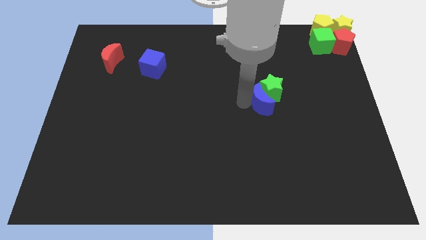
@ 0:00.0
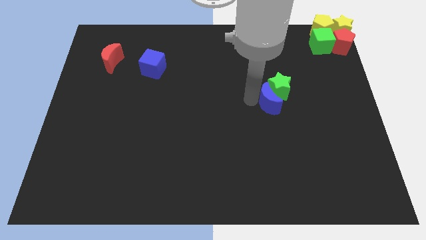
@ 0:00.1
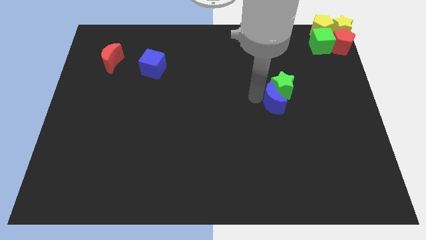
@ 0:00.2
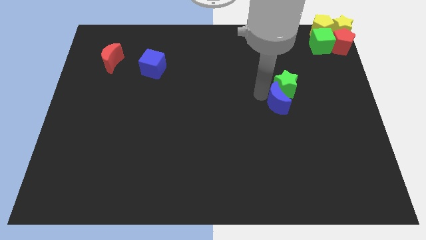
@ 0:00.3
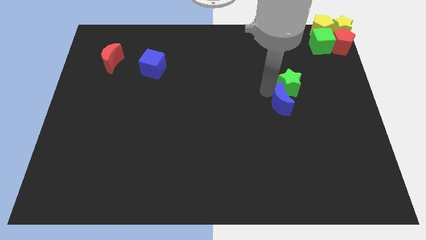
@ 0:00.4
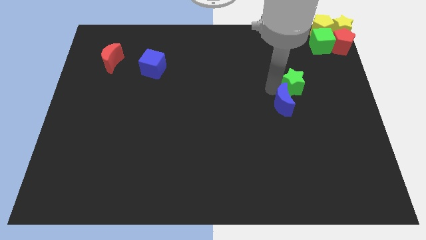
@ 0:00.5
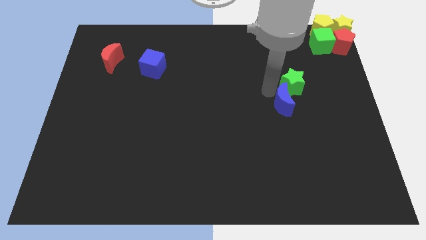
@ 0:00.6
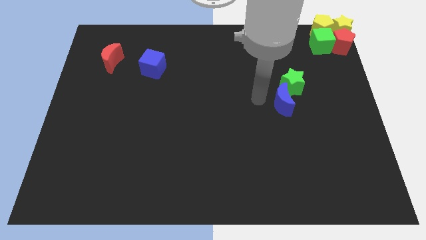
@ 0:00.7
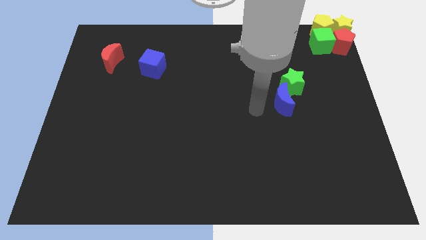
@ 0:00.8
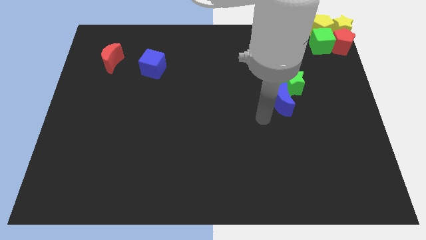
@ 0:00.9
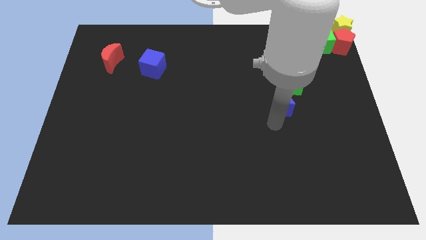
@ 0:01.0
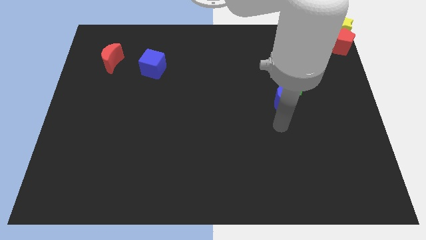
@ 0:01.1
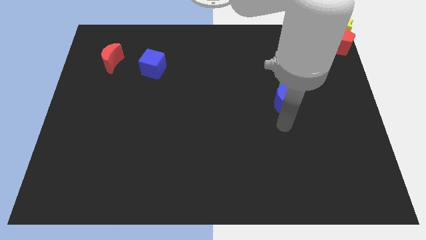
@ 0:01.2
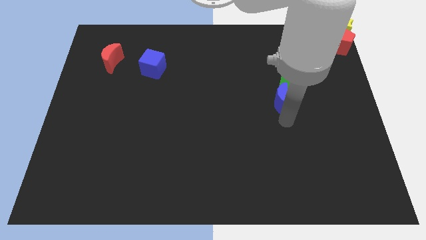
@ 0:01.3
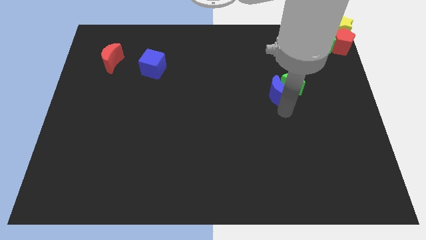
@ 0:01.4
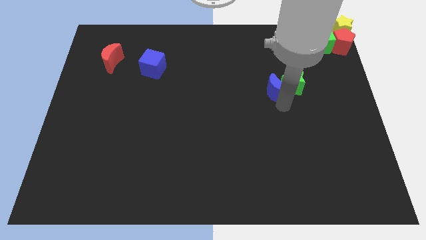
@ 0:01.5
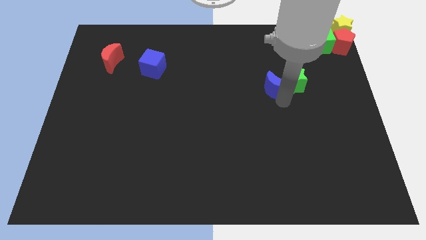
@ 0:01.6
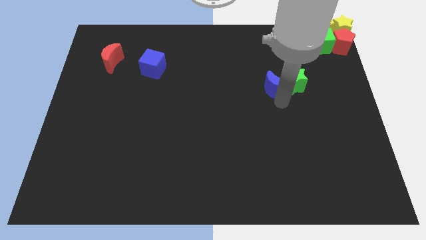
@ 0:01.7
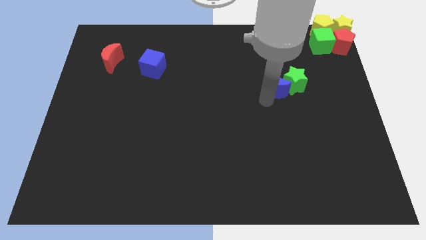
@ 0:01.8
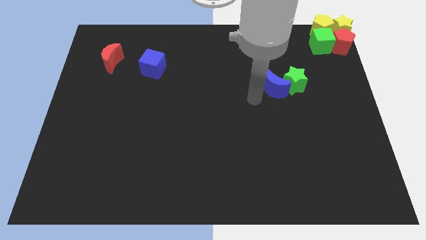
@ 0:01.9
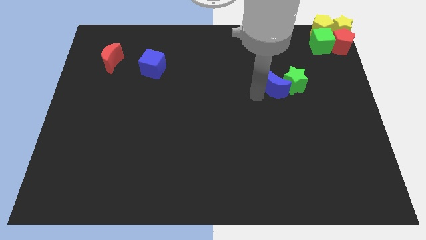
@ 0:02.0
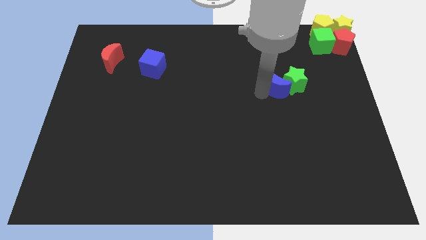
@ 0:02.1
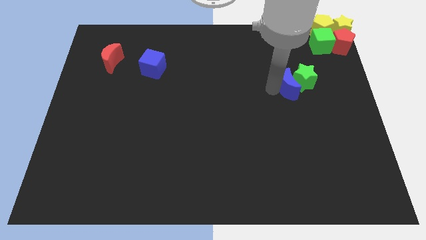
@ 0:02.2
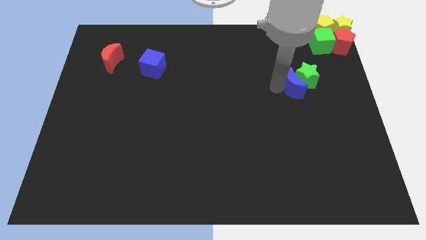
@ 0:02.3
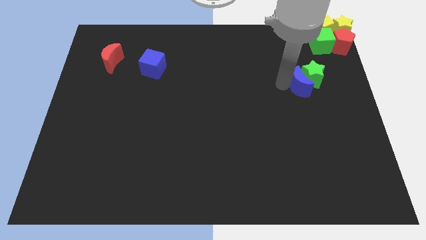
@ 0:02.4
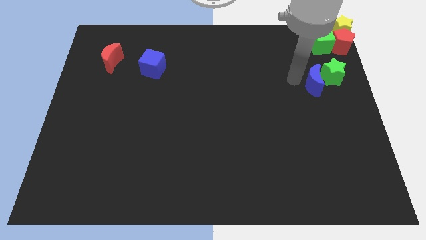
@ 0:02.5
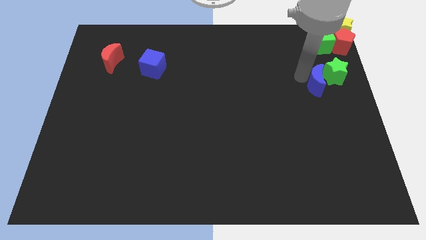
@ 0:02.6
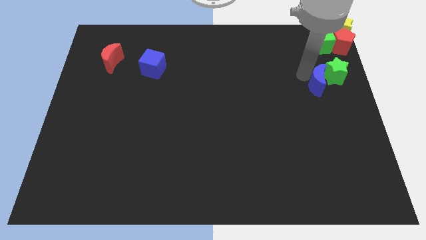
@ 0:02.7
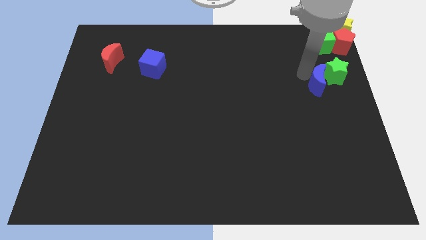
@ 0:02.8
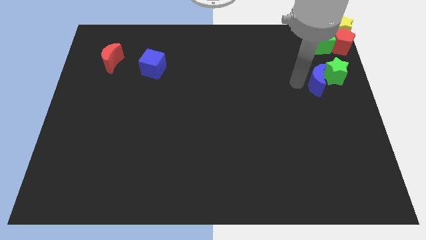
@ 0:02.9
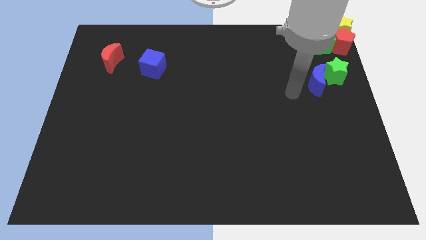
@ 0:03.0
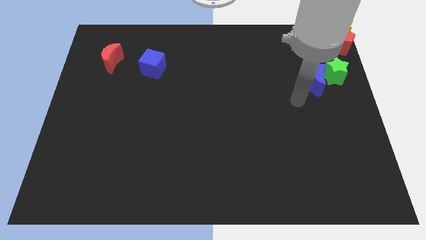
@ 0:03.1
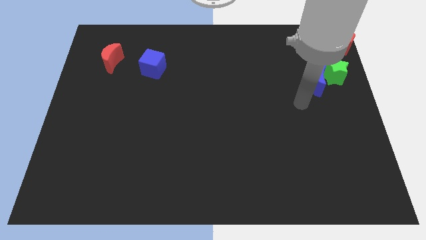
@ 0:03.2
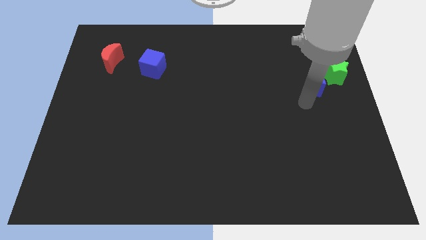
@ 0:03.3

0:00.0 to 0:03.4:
move blue crescent towards right

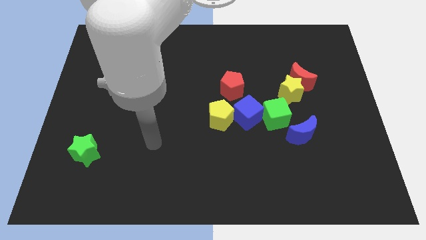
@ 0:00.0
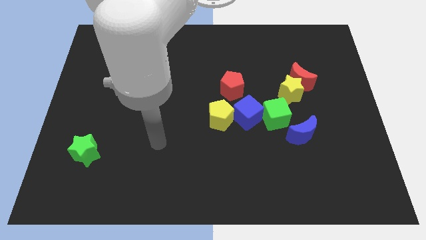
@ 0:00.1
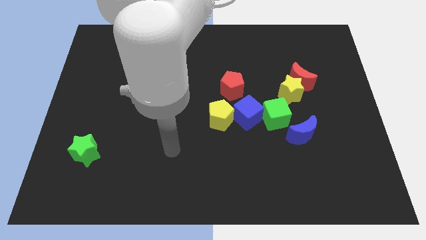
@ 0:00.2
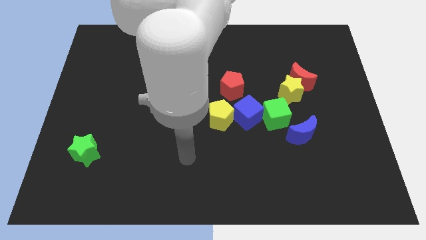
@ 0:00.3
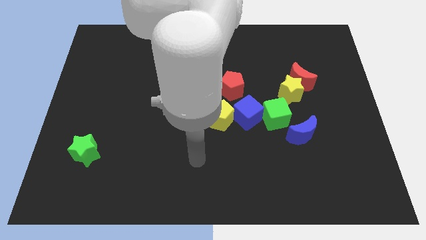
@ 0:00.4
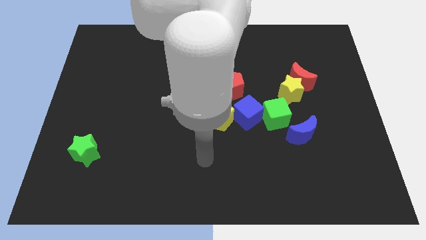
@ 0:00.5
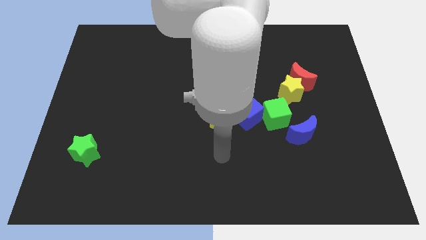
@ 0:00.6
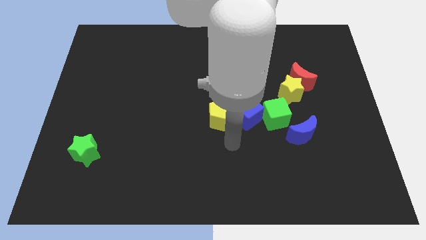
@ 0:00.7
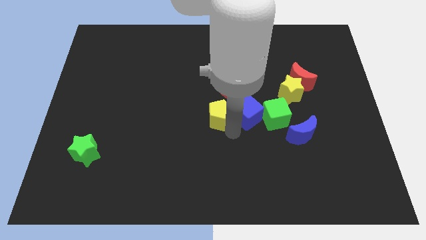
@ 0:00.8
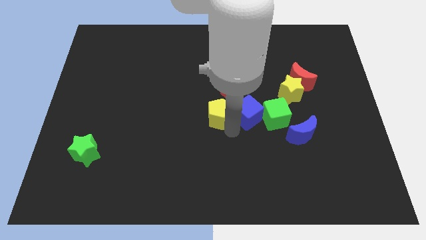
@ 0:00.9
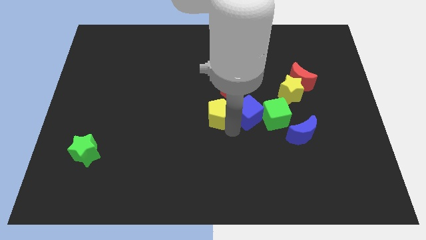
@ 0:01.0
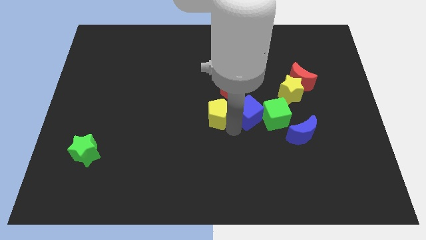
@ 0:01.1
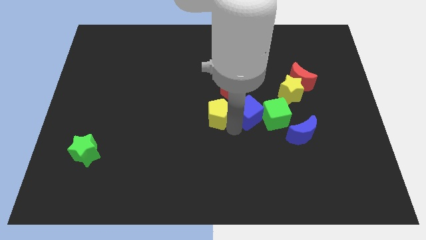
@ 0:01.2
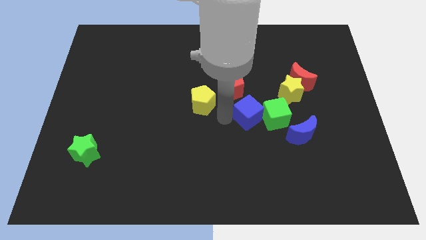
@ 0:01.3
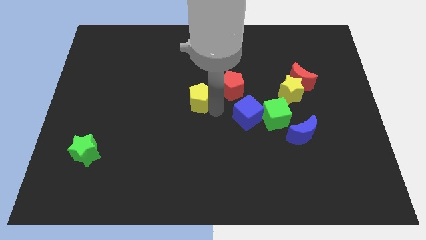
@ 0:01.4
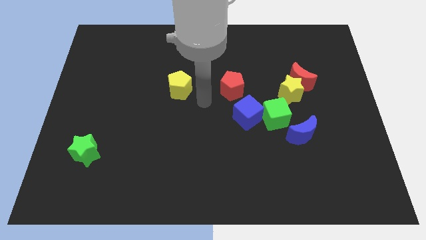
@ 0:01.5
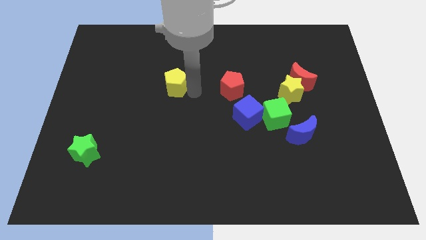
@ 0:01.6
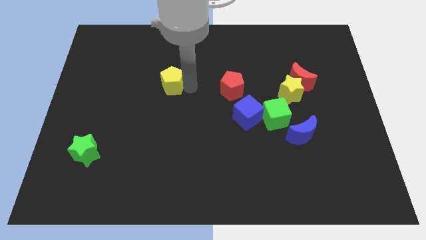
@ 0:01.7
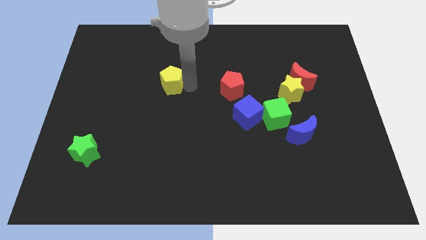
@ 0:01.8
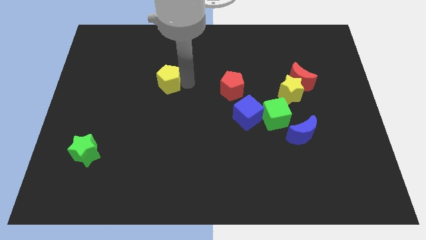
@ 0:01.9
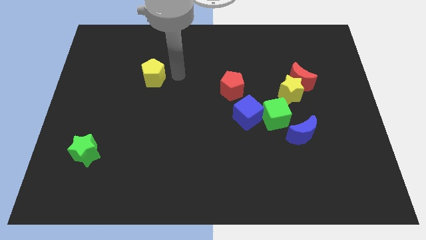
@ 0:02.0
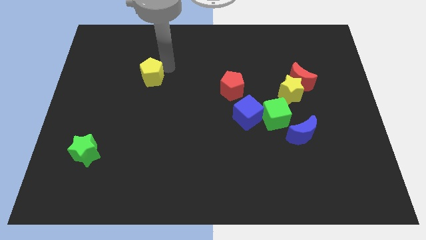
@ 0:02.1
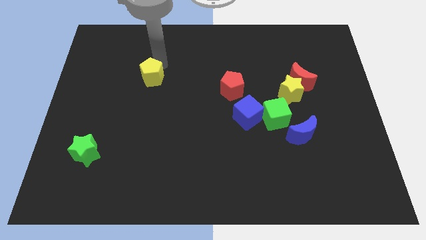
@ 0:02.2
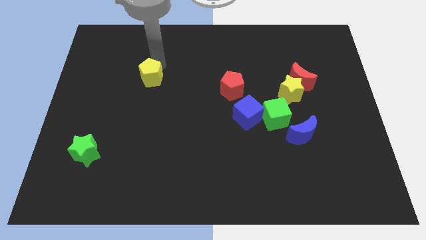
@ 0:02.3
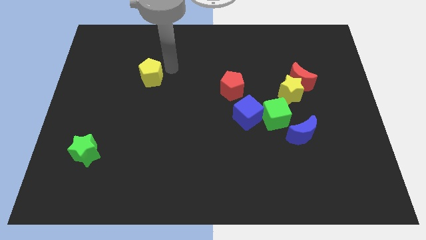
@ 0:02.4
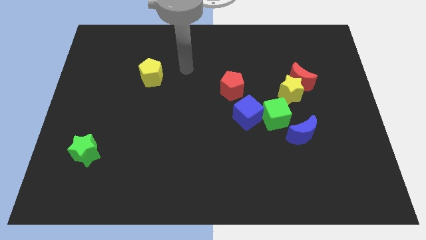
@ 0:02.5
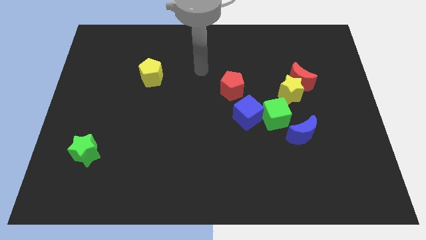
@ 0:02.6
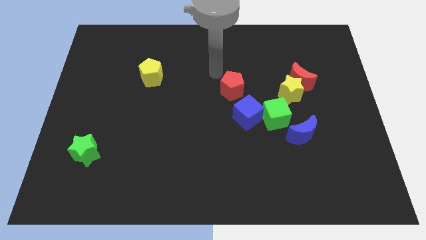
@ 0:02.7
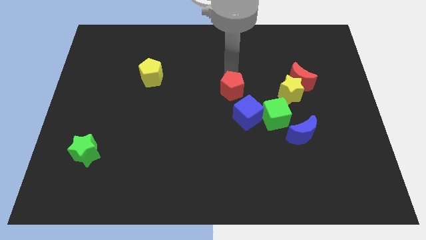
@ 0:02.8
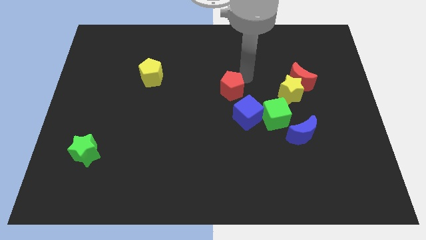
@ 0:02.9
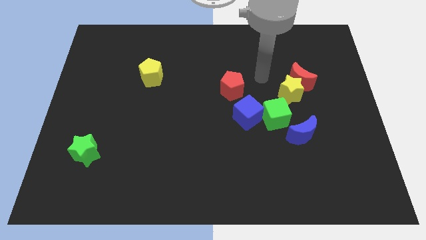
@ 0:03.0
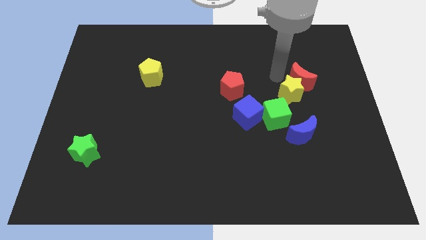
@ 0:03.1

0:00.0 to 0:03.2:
separate the yellow pentagon from the blue cube

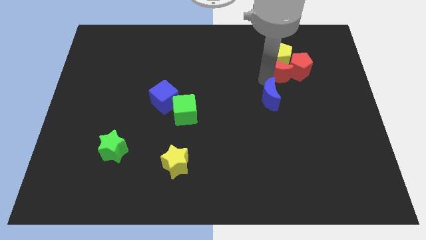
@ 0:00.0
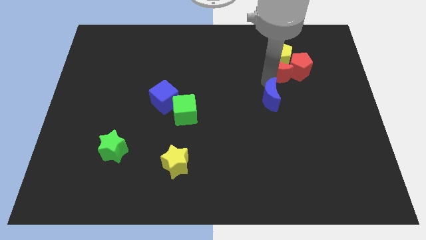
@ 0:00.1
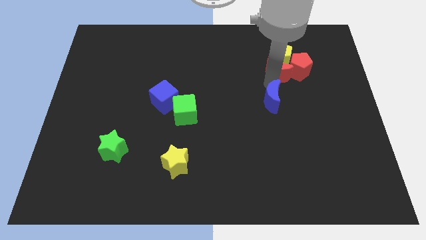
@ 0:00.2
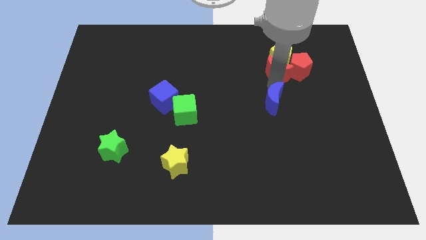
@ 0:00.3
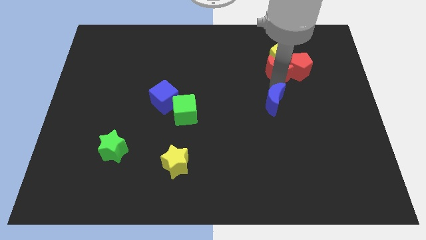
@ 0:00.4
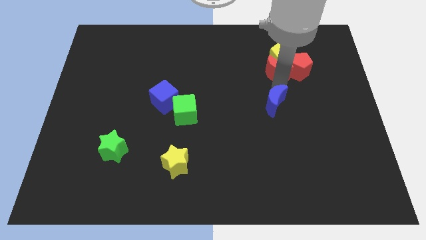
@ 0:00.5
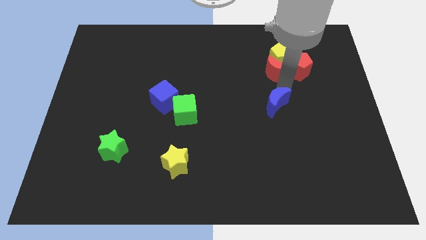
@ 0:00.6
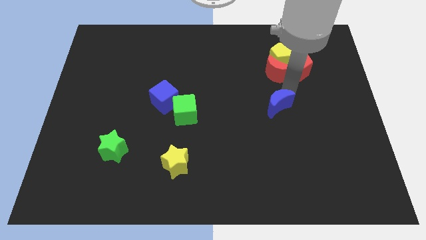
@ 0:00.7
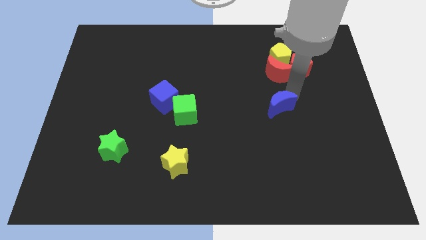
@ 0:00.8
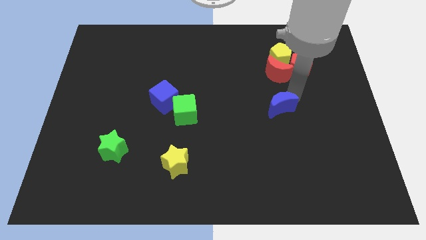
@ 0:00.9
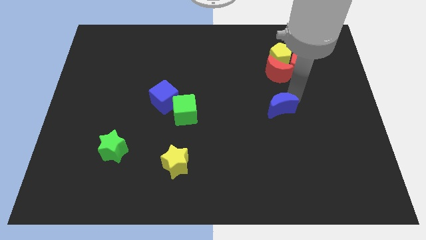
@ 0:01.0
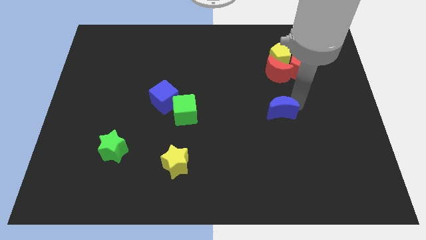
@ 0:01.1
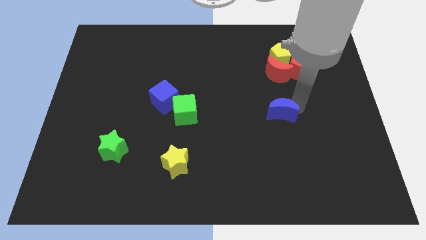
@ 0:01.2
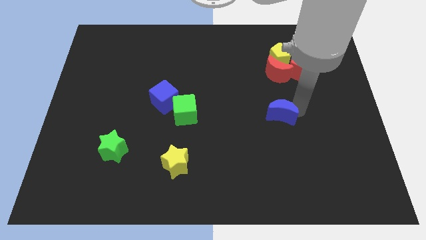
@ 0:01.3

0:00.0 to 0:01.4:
move the blue crescent parallel to the green cube

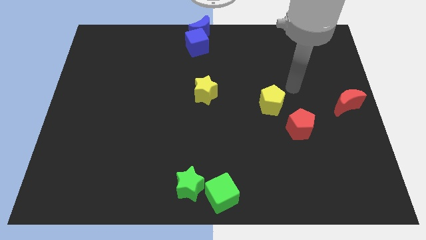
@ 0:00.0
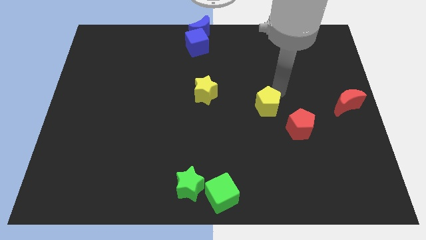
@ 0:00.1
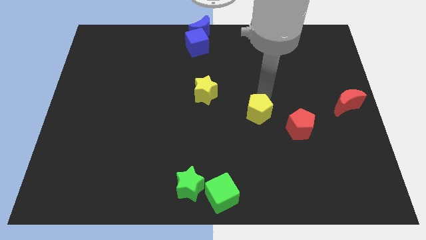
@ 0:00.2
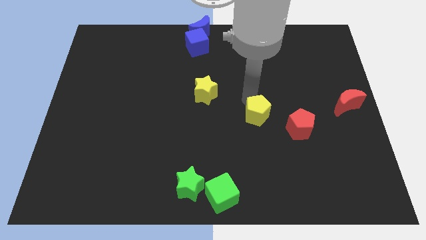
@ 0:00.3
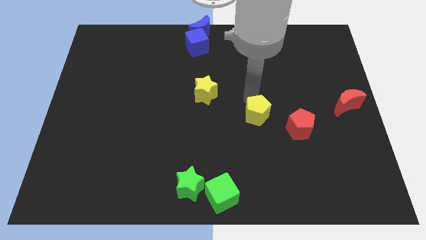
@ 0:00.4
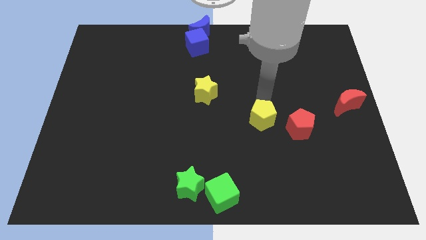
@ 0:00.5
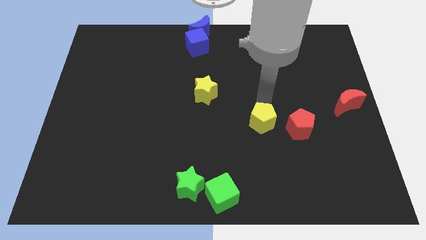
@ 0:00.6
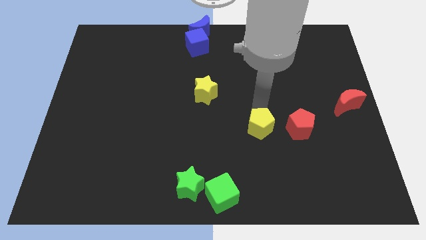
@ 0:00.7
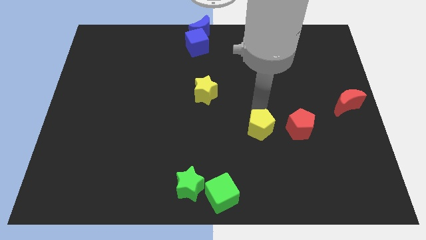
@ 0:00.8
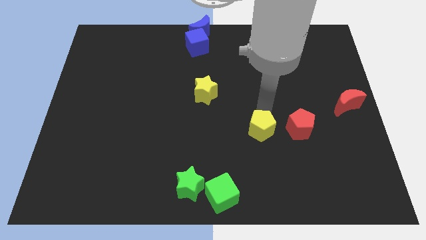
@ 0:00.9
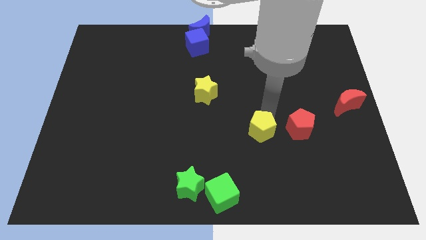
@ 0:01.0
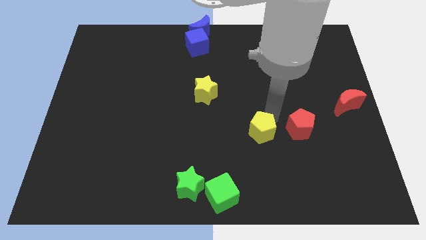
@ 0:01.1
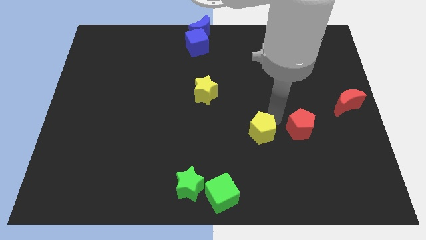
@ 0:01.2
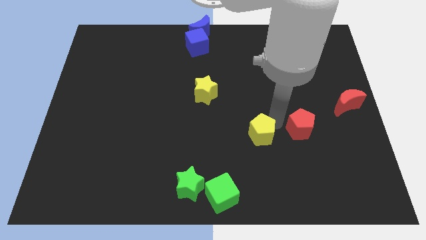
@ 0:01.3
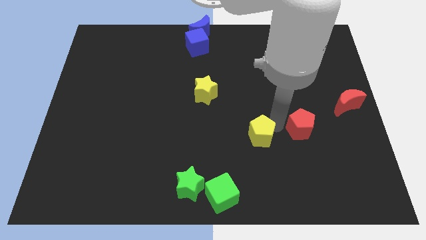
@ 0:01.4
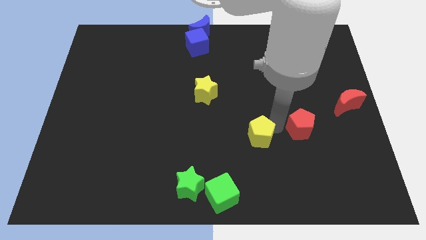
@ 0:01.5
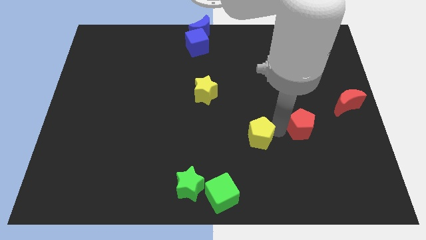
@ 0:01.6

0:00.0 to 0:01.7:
place the yellow pentagon to the left of the red pentagon
